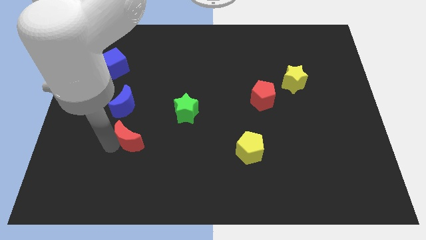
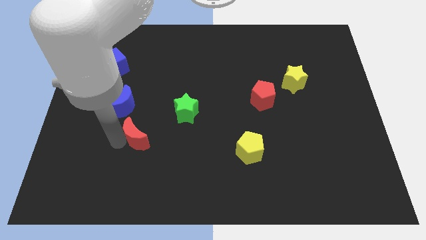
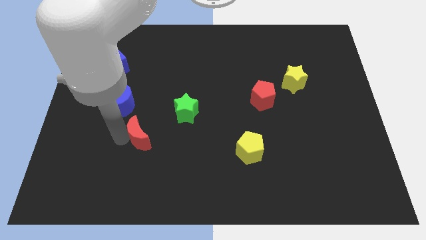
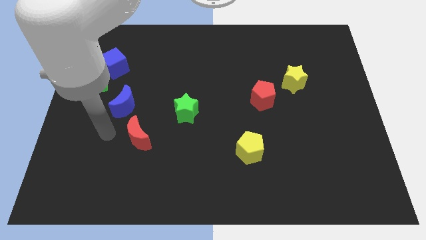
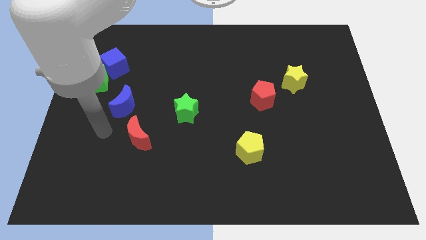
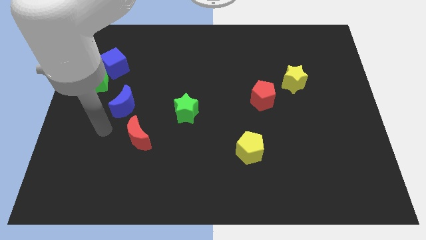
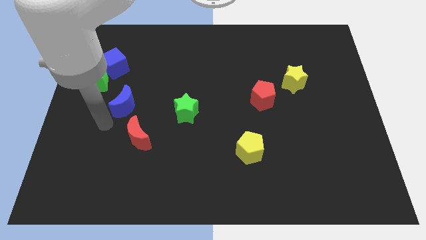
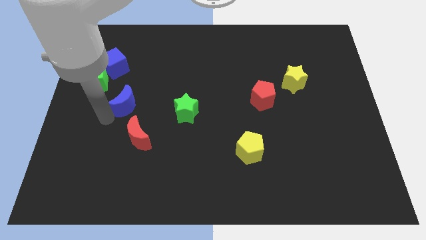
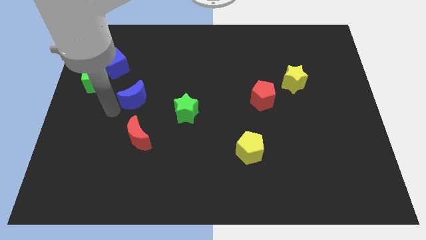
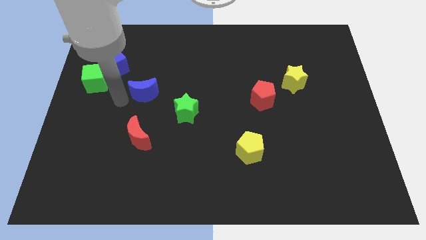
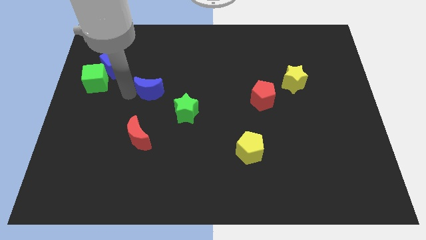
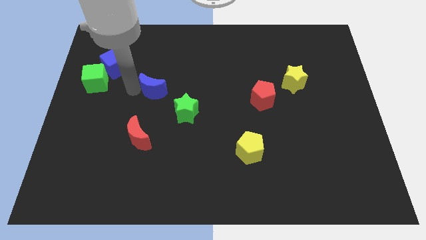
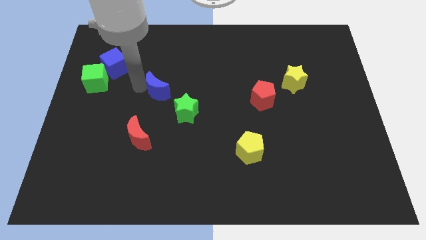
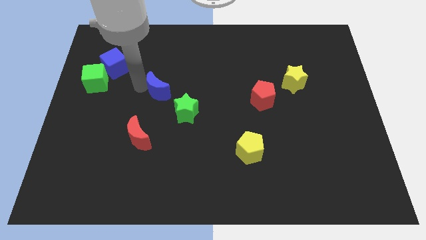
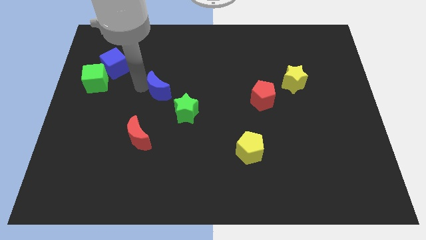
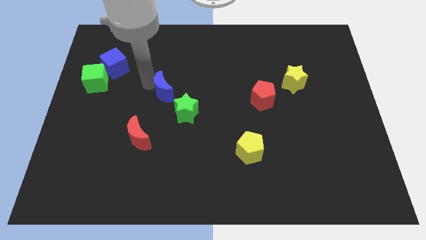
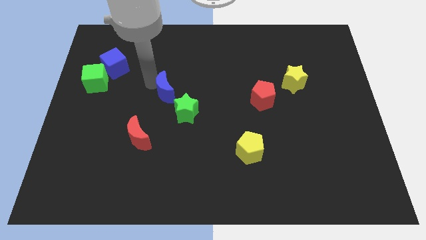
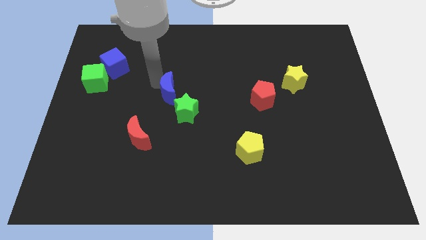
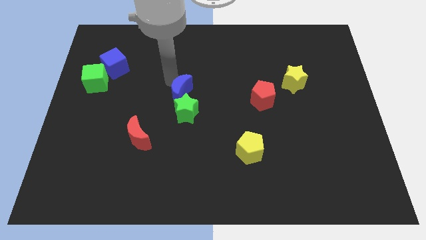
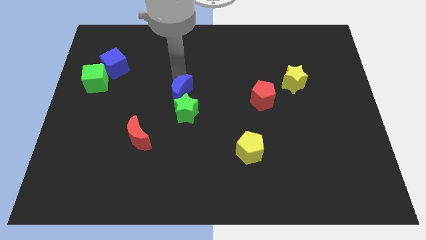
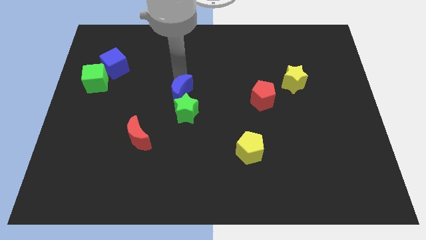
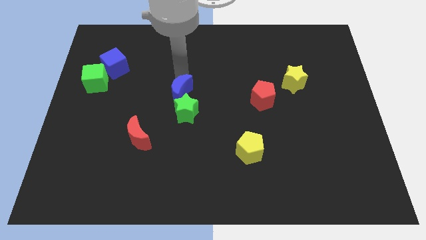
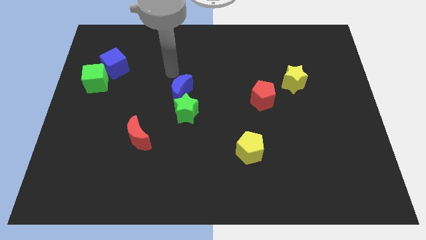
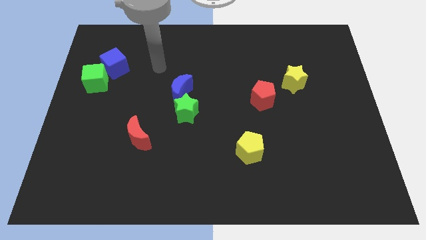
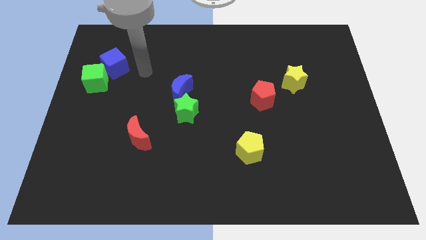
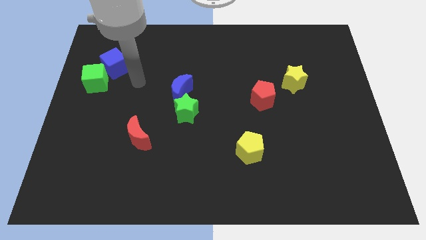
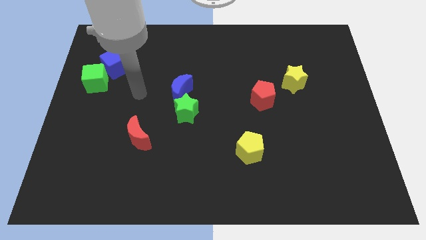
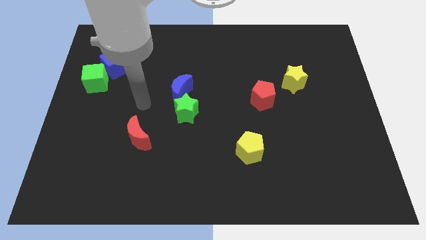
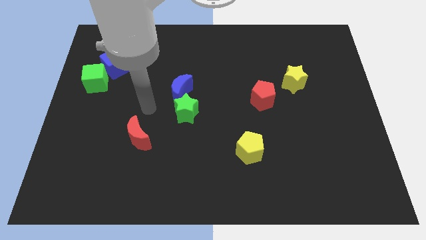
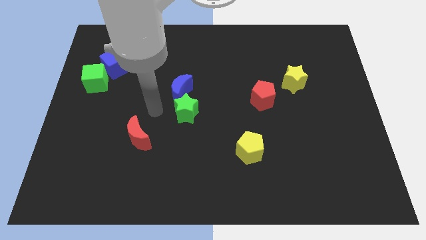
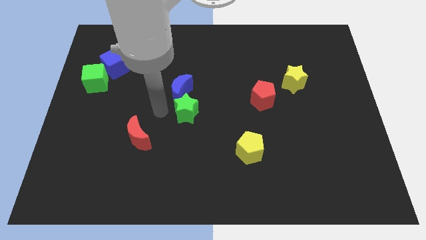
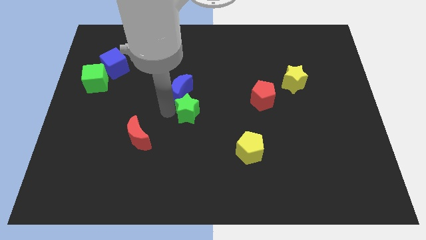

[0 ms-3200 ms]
push blue crescent to the top of green star

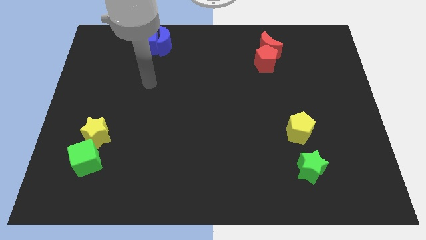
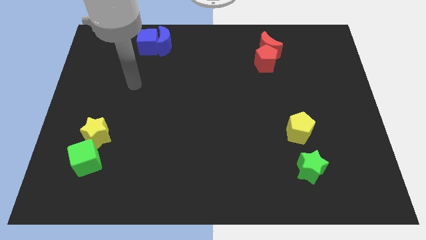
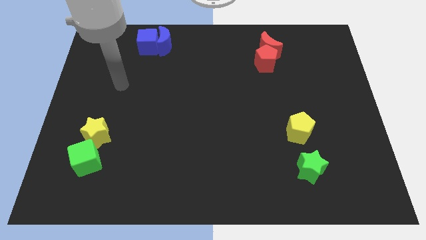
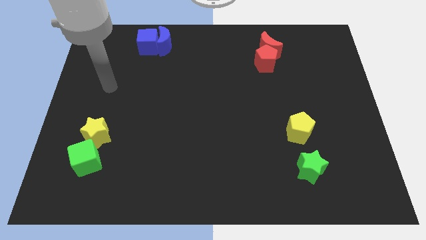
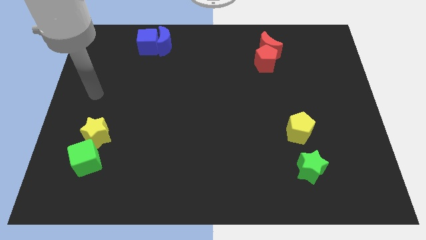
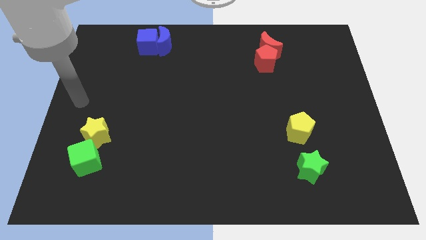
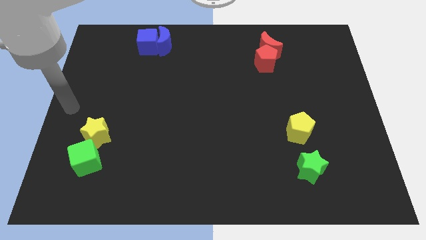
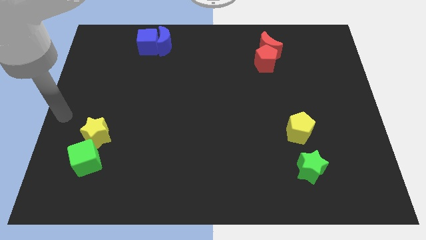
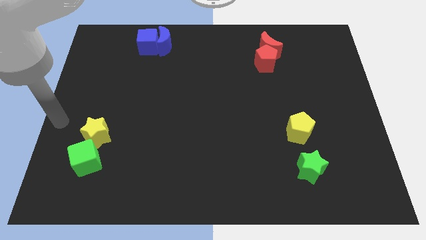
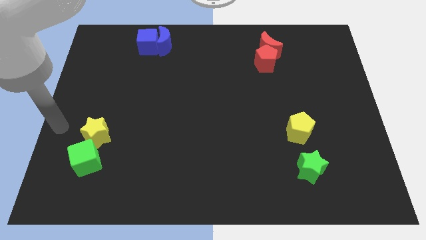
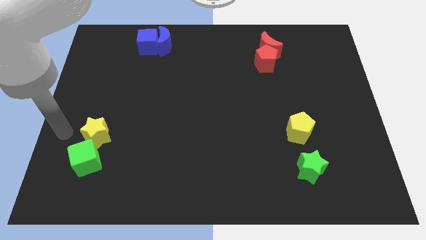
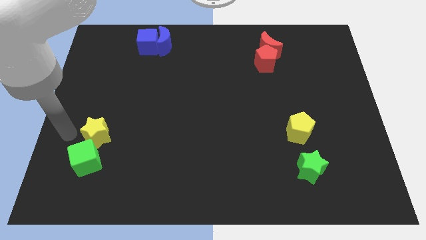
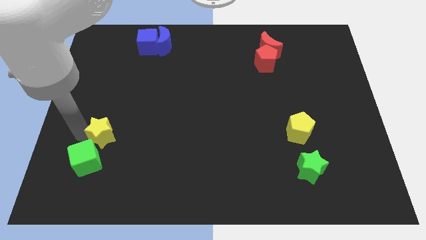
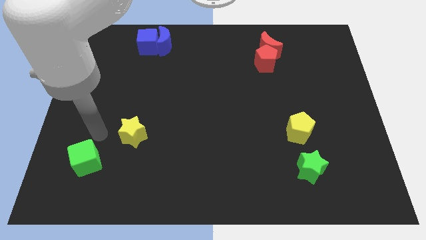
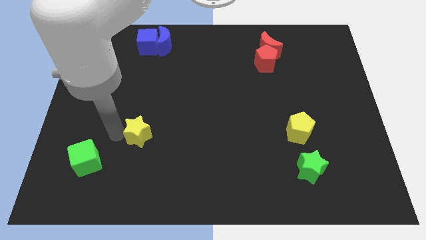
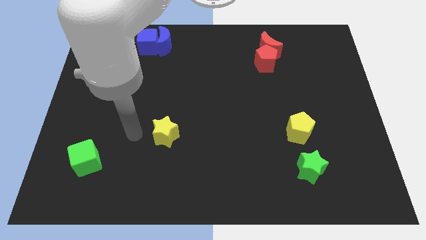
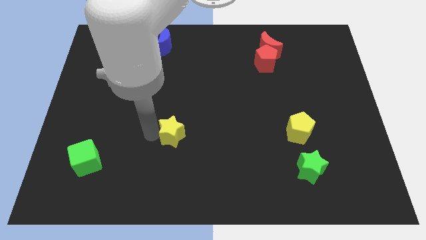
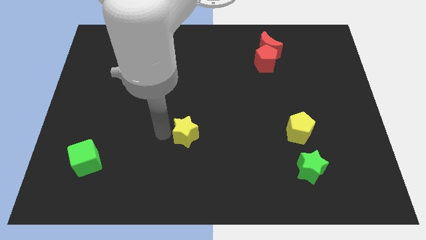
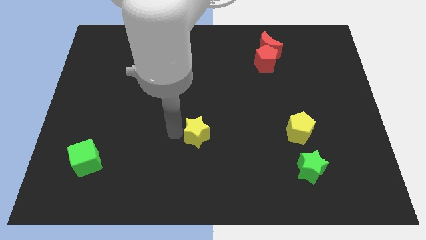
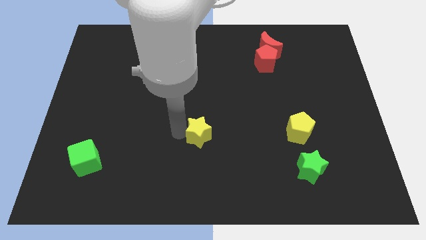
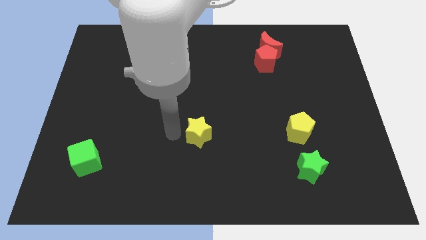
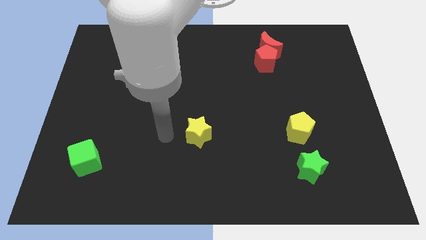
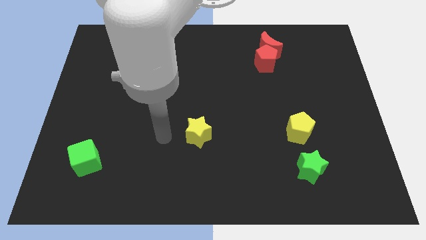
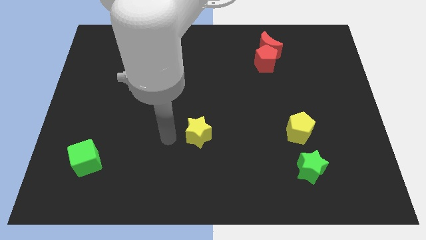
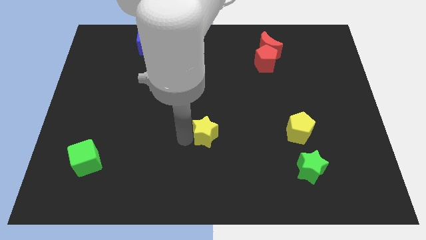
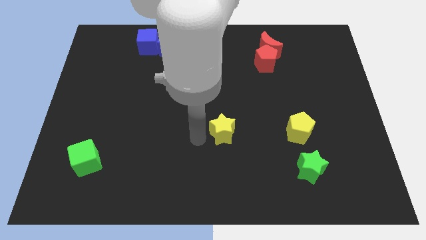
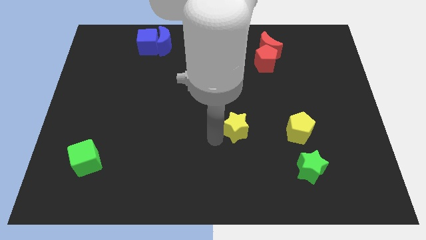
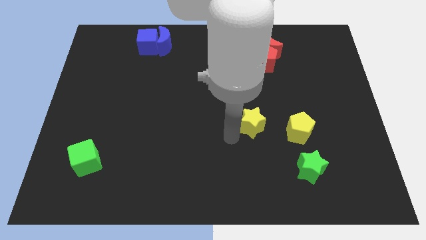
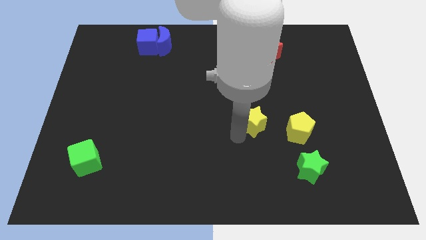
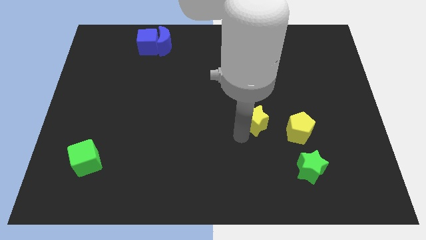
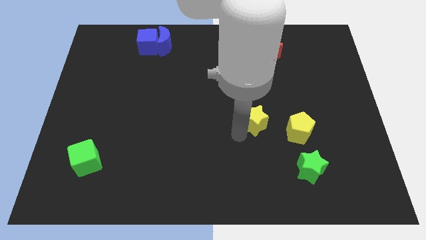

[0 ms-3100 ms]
separate yellow star from green cube

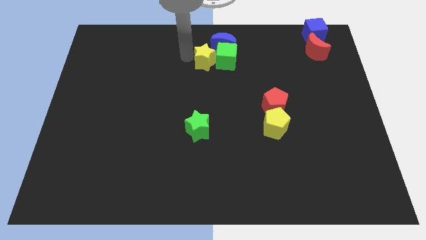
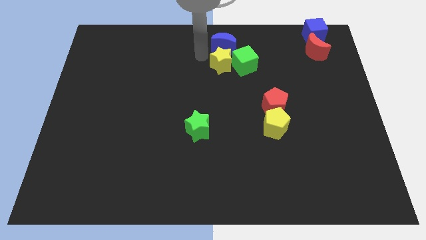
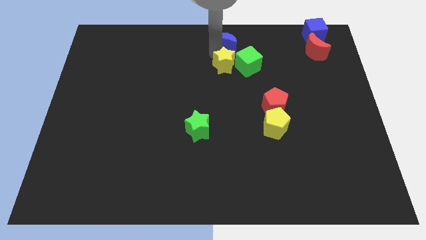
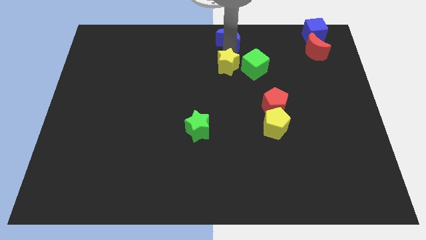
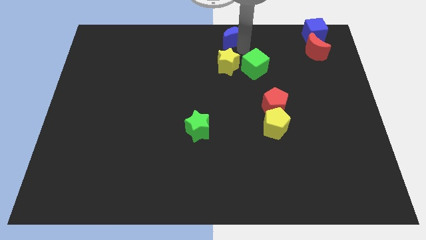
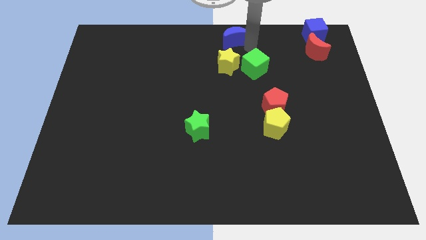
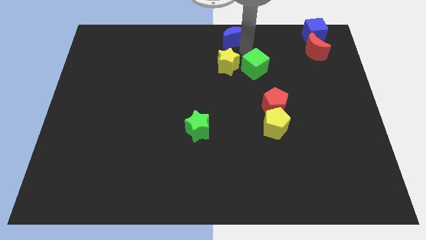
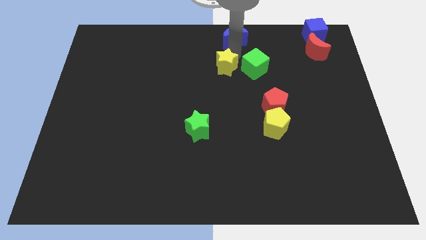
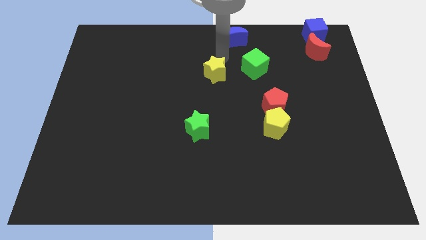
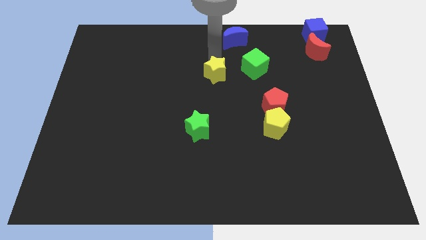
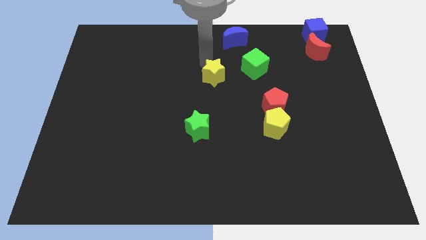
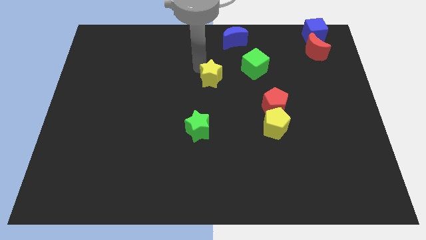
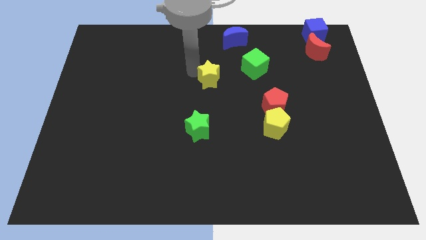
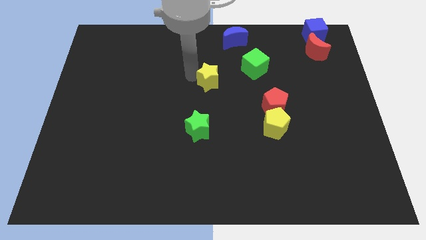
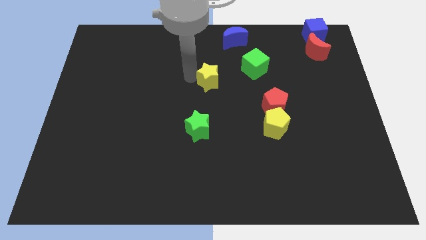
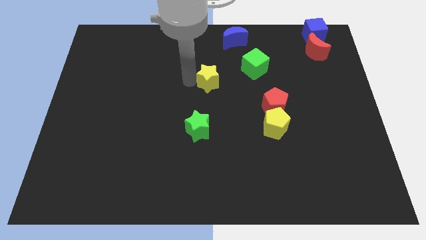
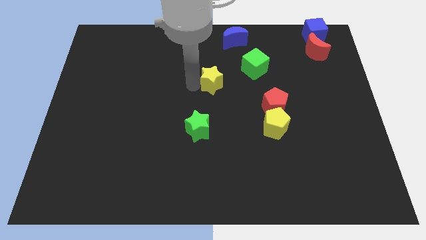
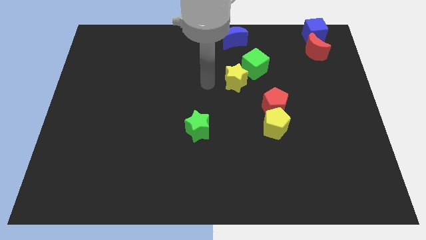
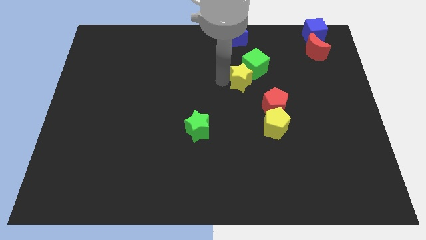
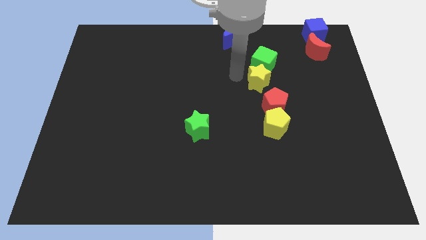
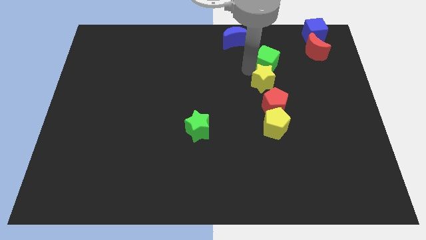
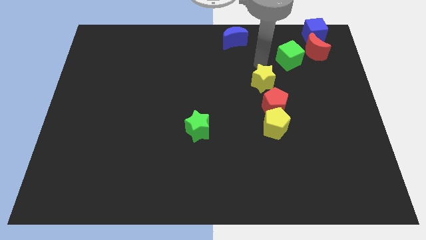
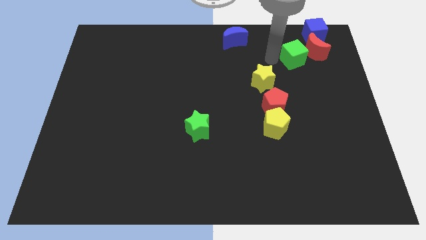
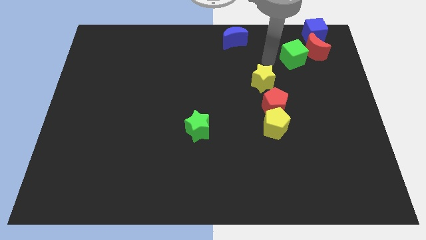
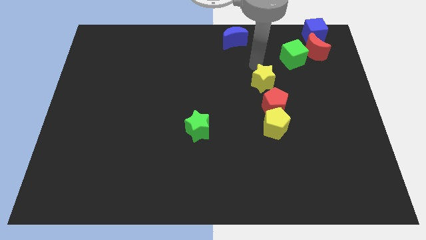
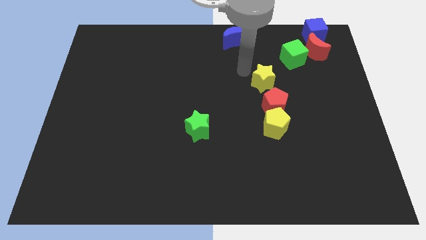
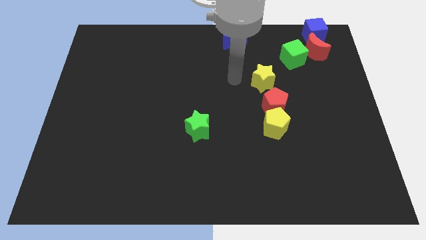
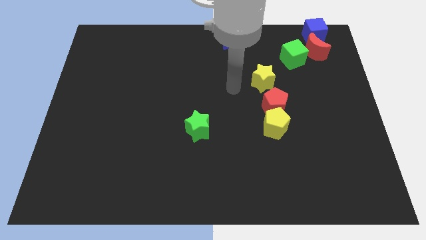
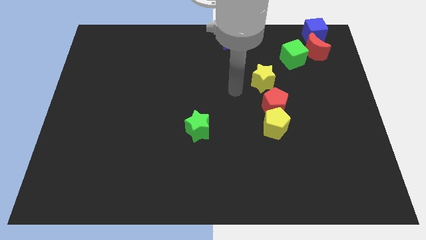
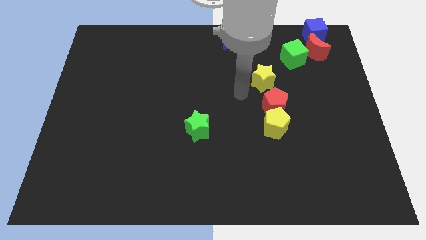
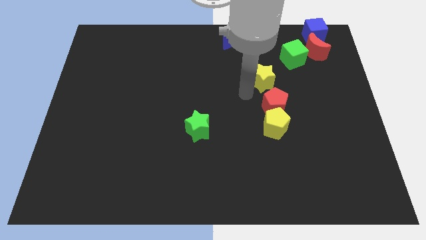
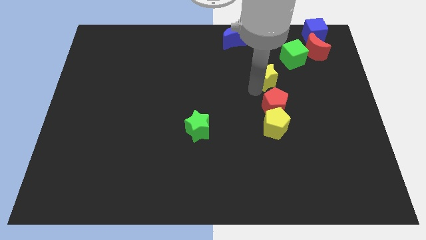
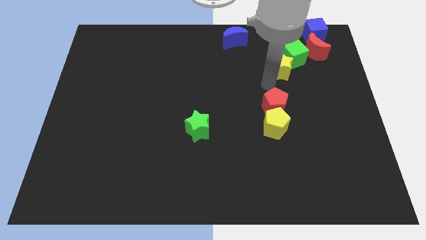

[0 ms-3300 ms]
push the green cube towards the red crescent
